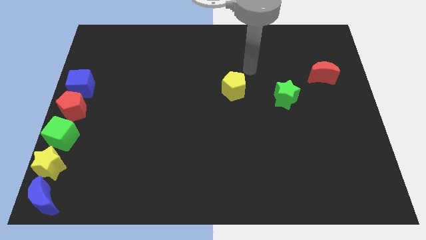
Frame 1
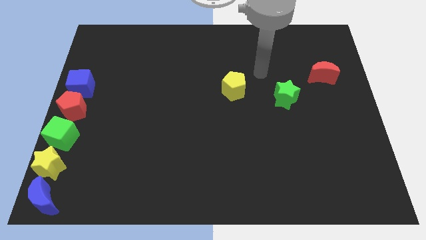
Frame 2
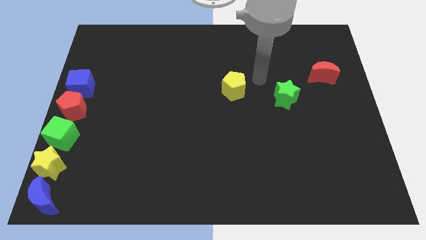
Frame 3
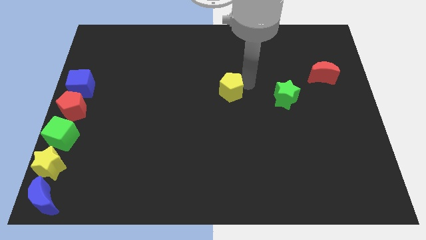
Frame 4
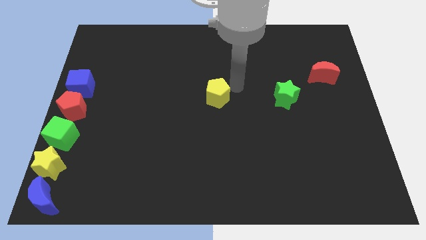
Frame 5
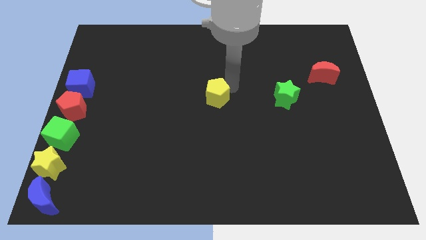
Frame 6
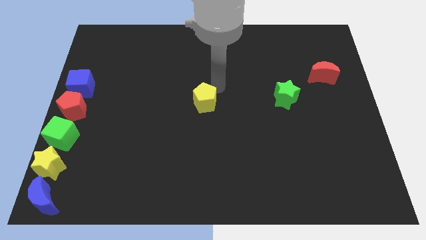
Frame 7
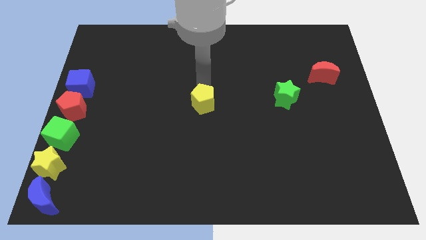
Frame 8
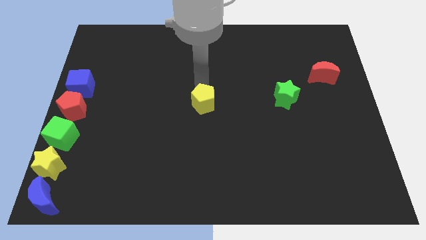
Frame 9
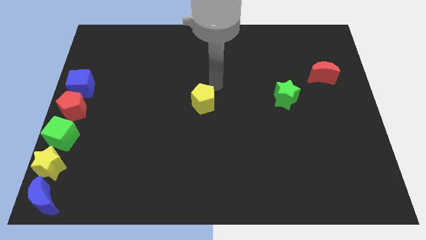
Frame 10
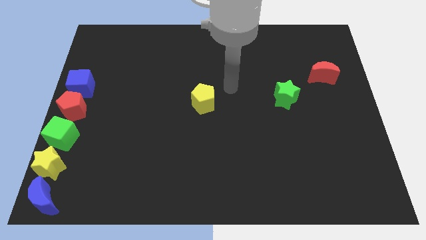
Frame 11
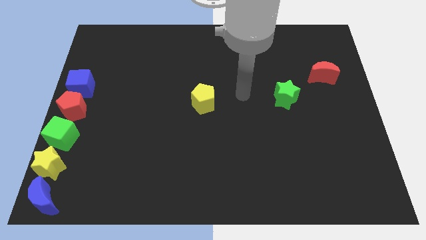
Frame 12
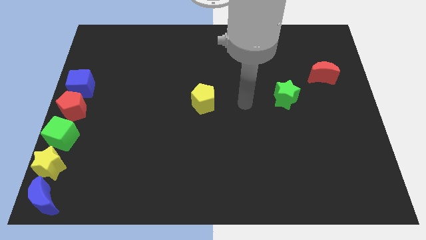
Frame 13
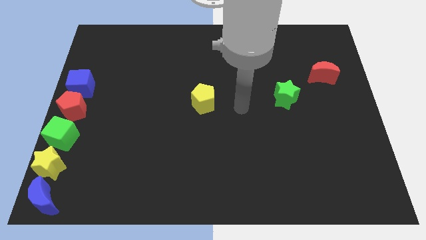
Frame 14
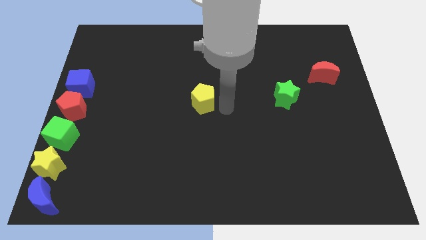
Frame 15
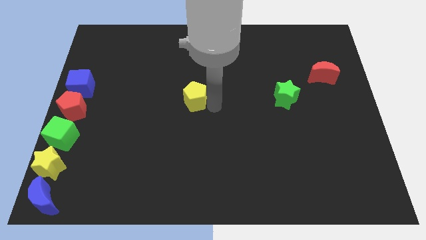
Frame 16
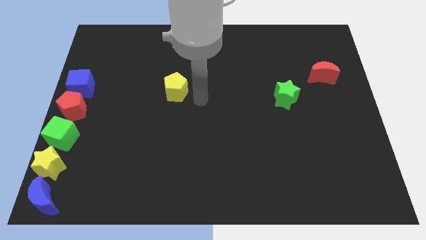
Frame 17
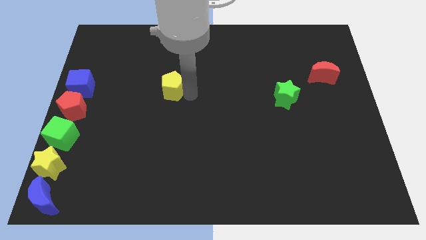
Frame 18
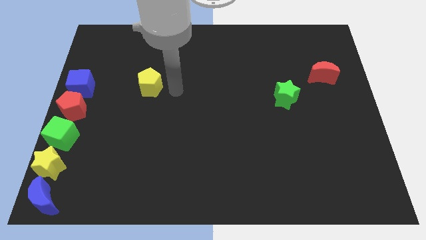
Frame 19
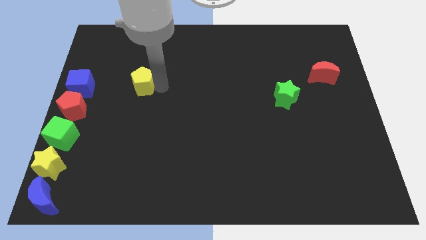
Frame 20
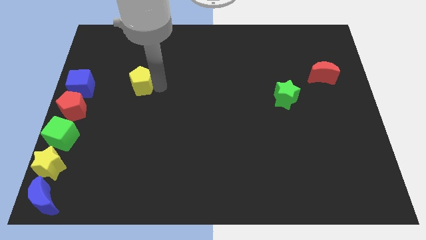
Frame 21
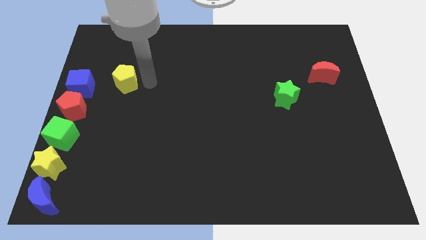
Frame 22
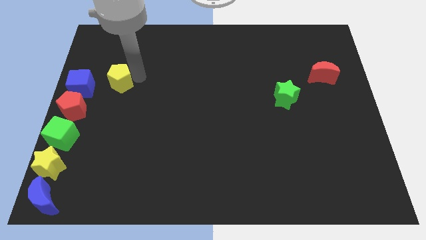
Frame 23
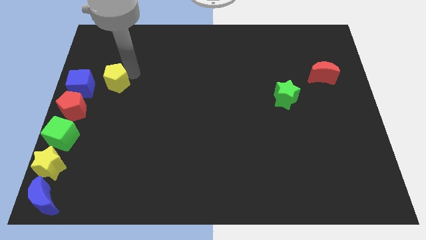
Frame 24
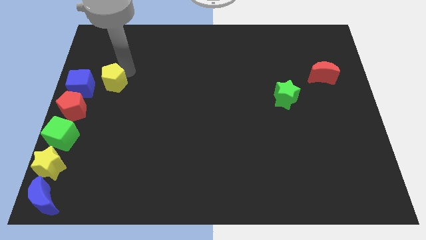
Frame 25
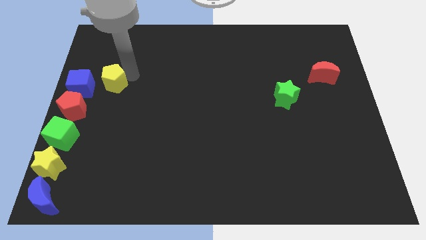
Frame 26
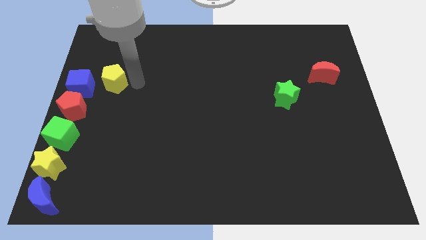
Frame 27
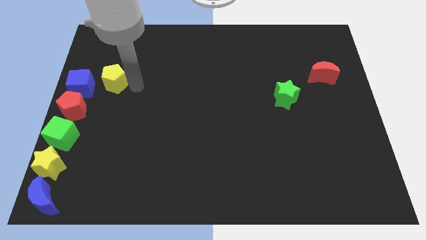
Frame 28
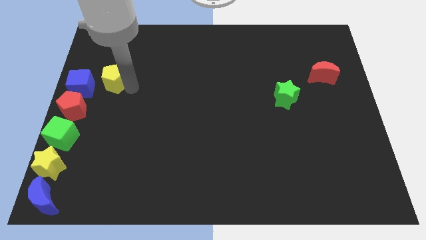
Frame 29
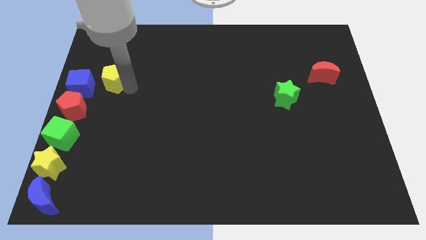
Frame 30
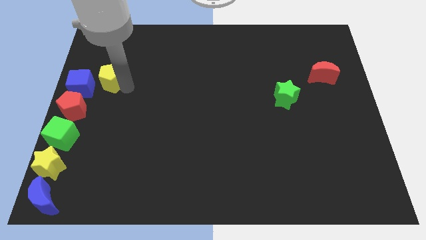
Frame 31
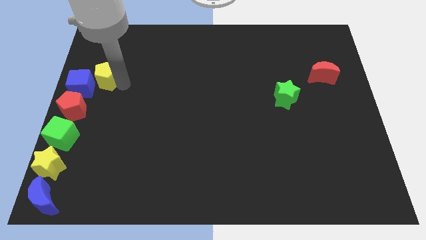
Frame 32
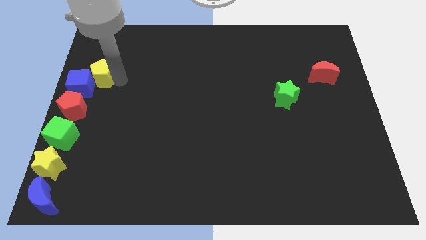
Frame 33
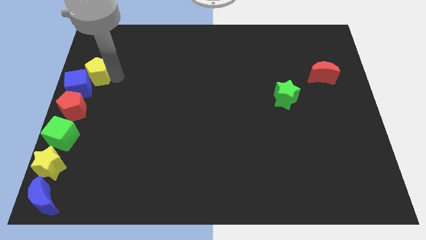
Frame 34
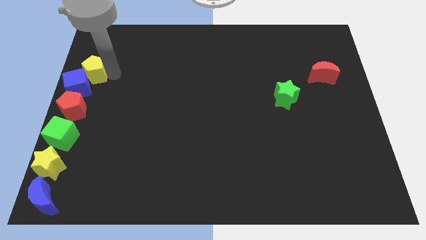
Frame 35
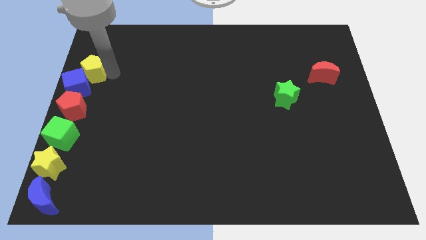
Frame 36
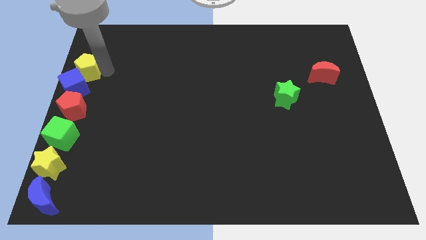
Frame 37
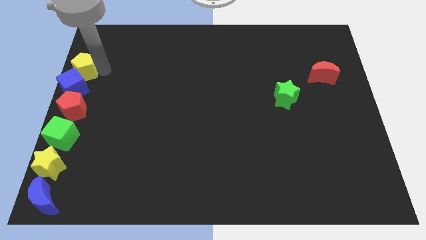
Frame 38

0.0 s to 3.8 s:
push the yellow pentagon into the blue cube

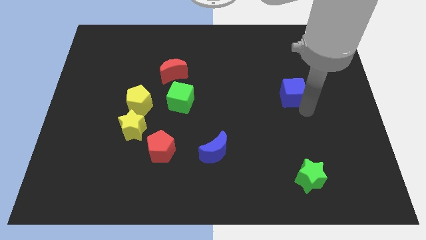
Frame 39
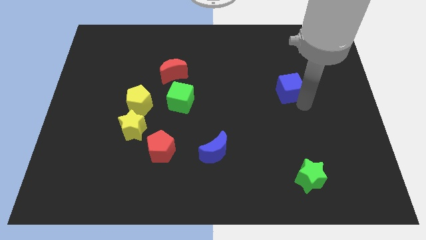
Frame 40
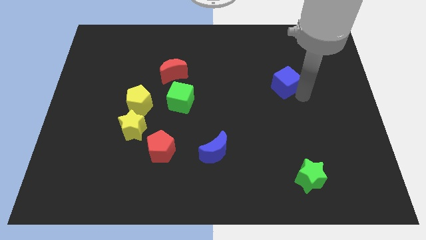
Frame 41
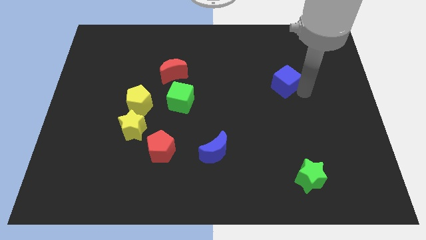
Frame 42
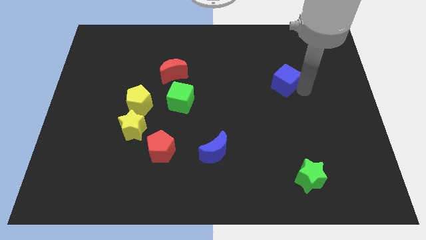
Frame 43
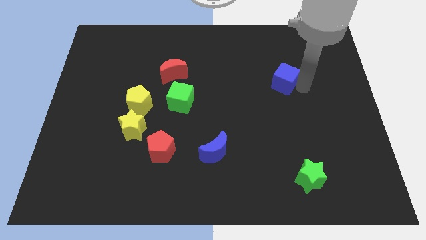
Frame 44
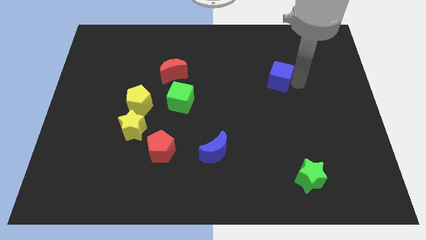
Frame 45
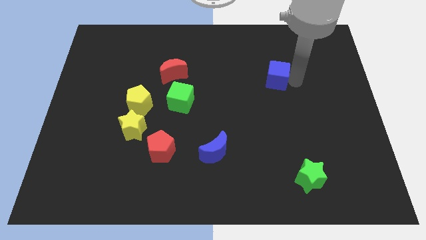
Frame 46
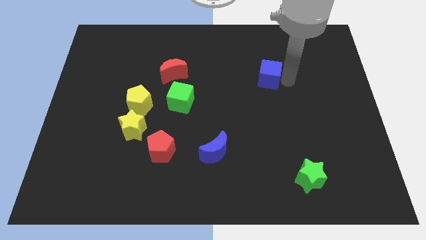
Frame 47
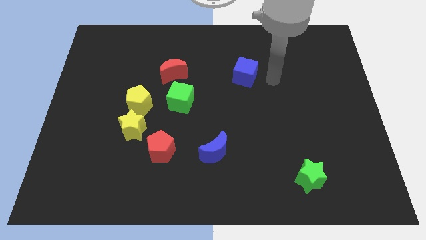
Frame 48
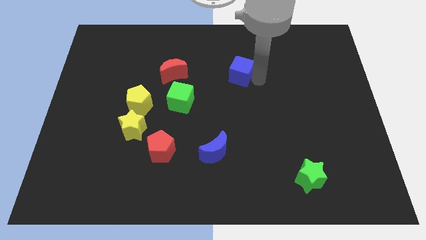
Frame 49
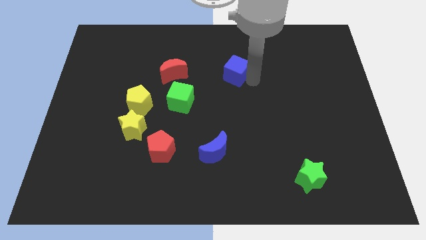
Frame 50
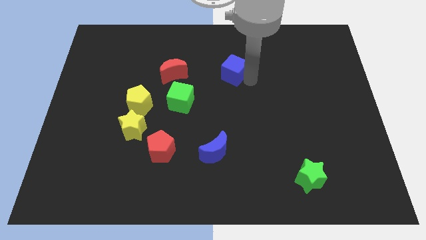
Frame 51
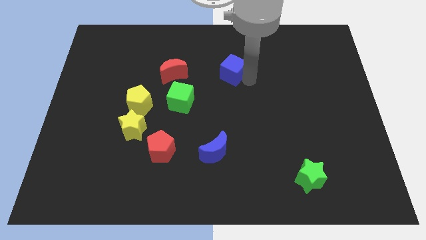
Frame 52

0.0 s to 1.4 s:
move blue cube slightly to the top side of the board

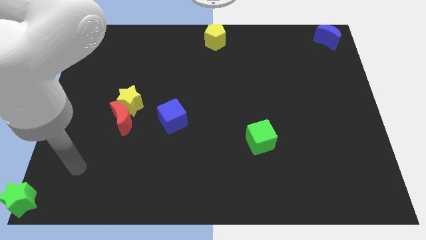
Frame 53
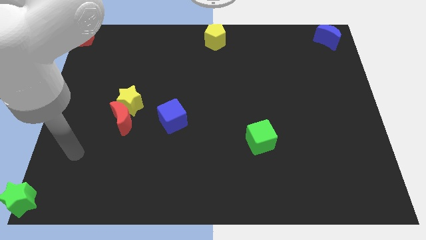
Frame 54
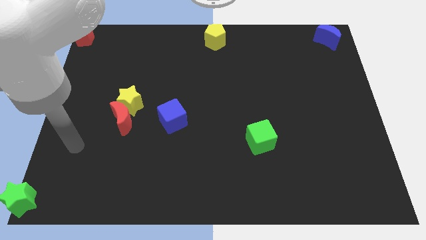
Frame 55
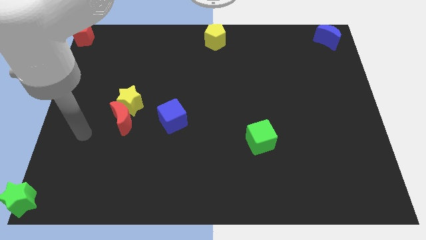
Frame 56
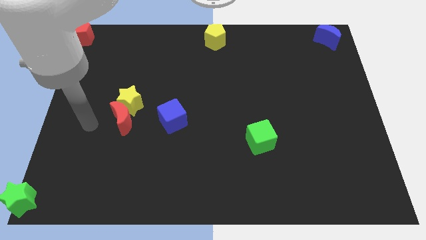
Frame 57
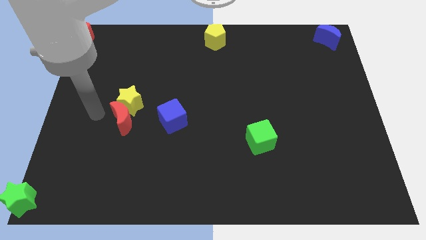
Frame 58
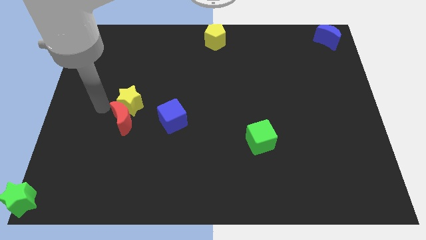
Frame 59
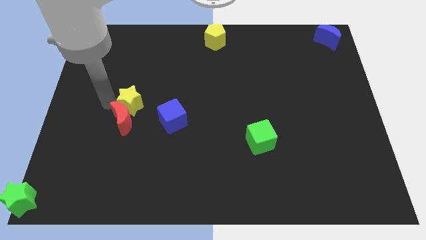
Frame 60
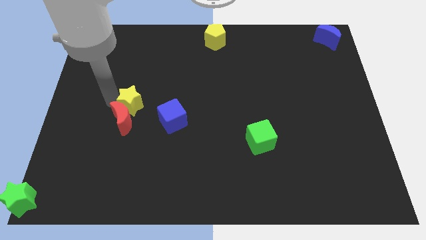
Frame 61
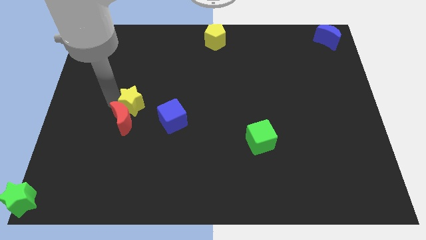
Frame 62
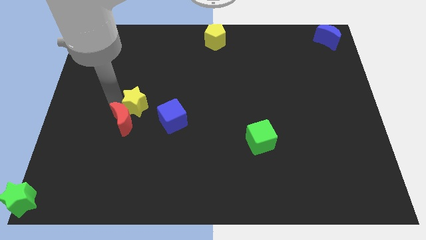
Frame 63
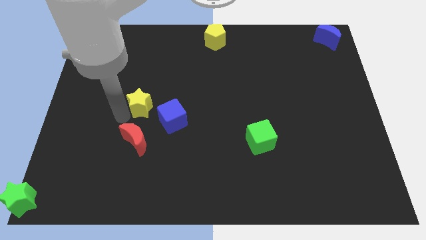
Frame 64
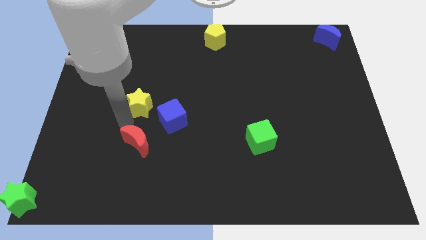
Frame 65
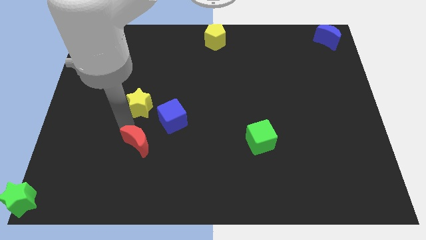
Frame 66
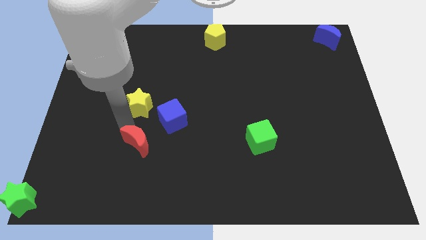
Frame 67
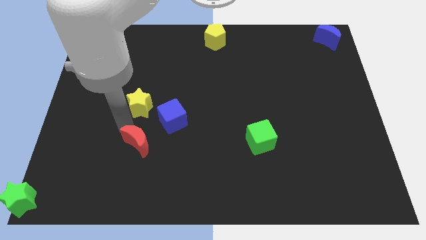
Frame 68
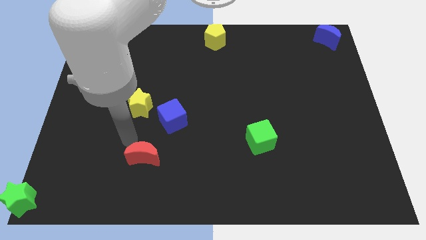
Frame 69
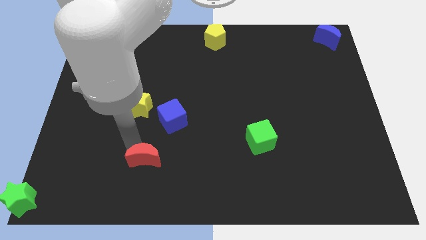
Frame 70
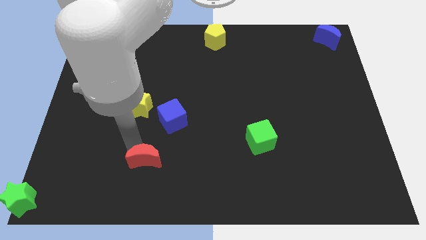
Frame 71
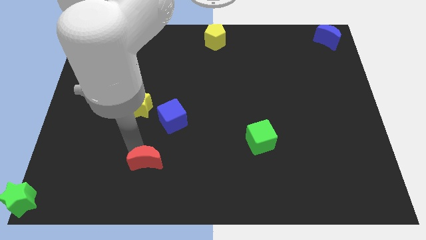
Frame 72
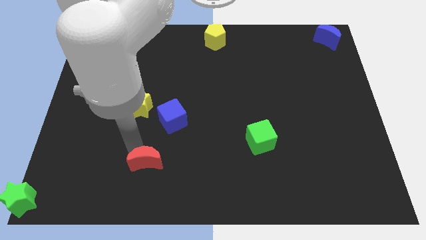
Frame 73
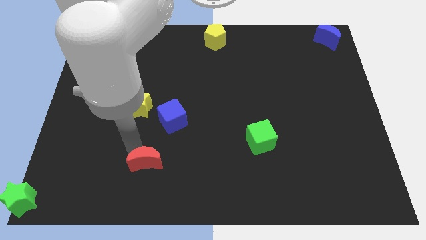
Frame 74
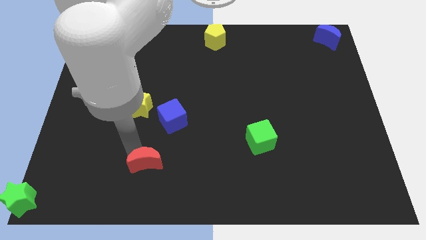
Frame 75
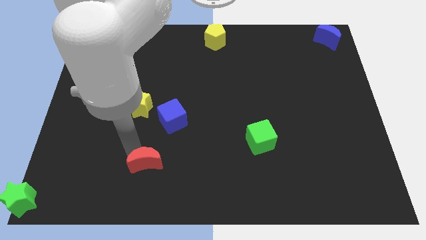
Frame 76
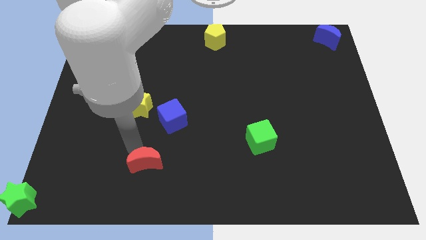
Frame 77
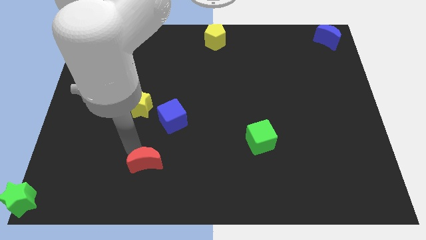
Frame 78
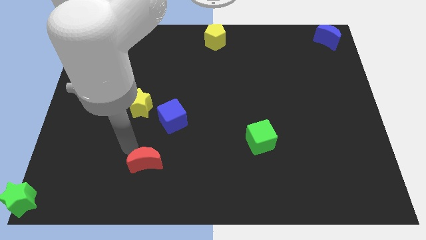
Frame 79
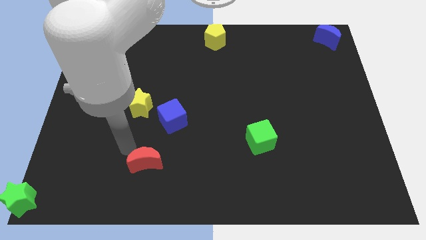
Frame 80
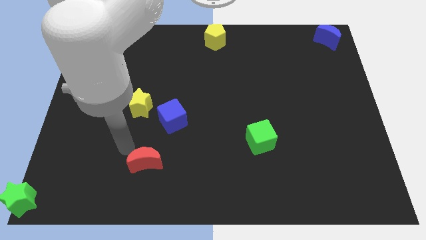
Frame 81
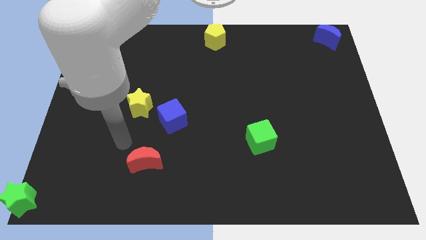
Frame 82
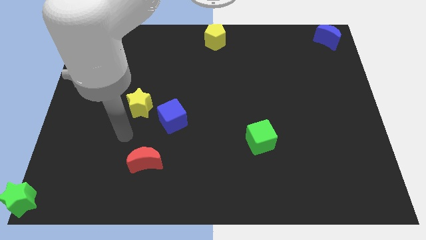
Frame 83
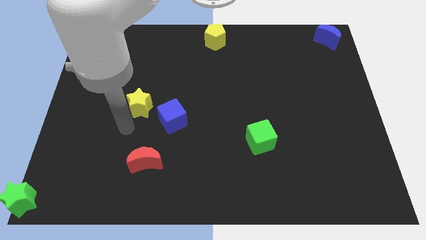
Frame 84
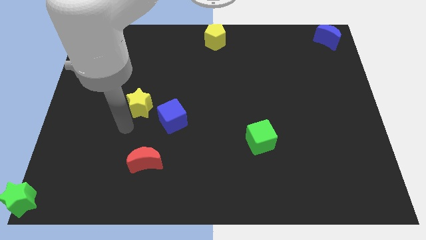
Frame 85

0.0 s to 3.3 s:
place the red crescent in between the green star and the green cube

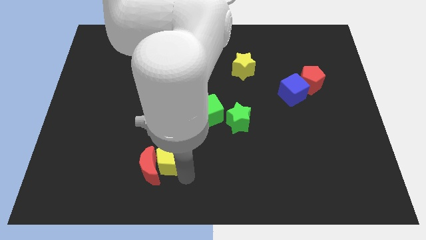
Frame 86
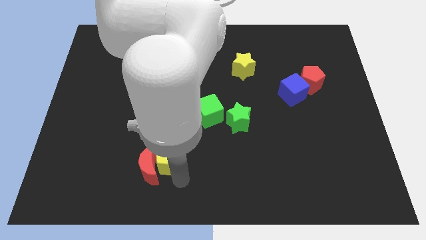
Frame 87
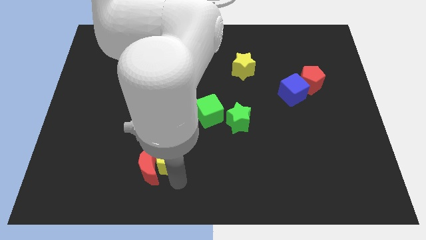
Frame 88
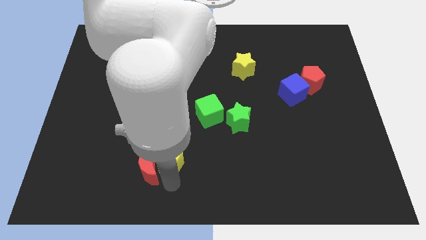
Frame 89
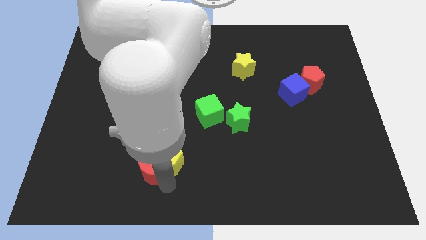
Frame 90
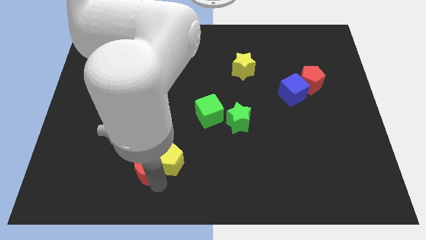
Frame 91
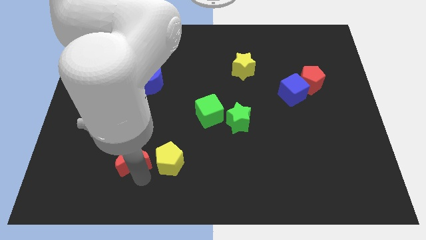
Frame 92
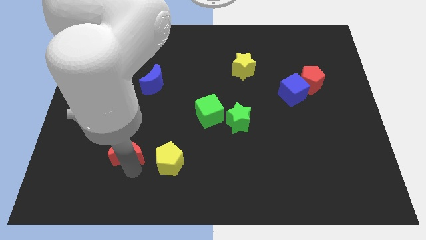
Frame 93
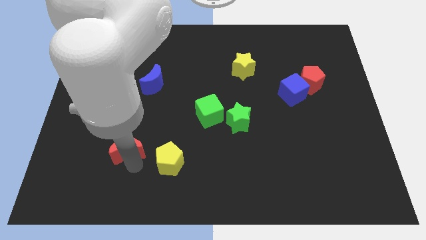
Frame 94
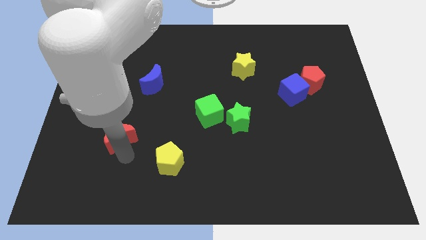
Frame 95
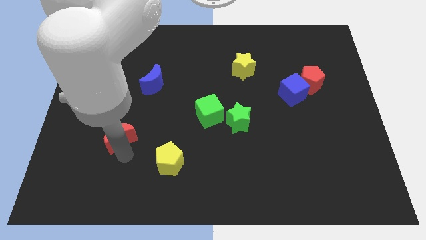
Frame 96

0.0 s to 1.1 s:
separate red crescent and yellow pentagon
